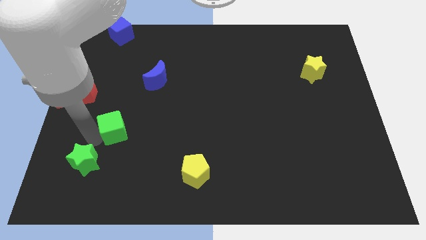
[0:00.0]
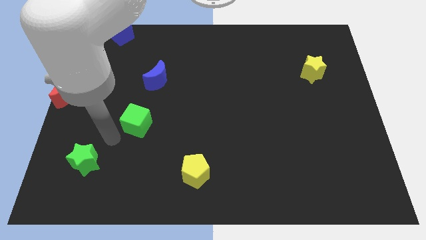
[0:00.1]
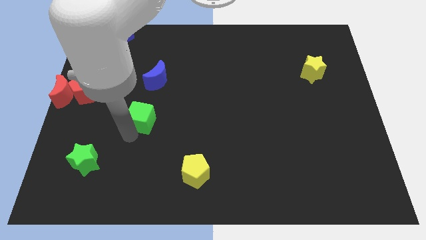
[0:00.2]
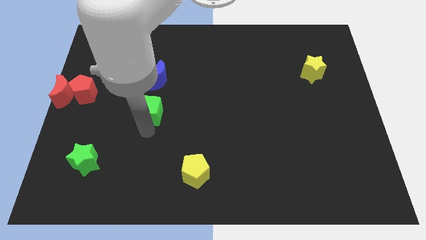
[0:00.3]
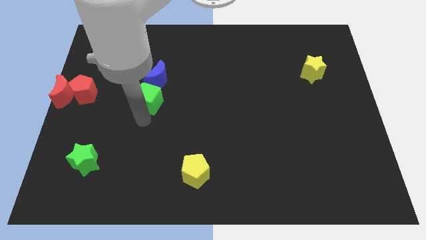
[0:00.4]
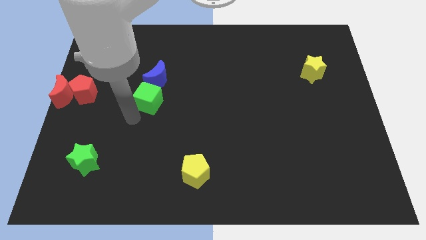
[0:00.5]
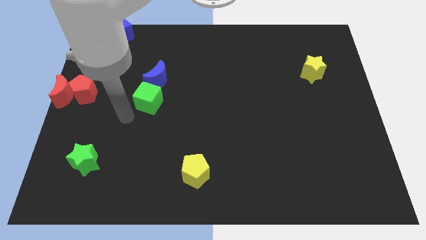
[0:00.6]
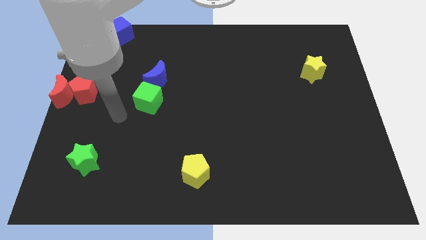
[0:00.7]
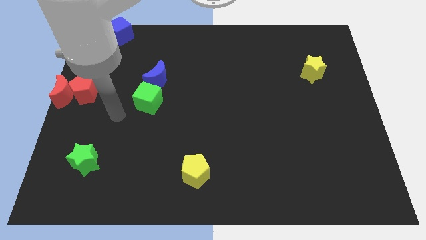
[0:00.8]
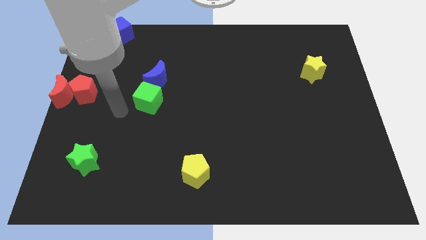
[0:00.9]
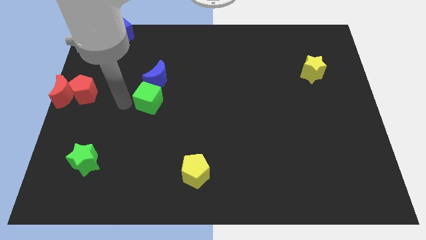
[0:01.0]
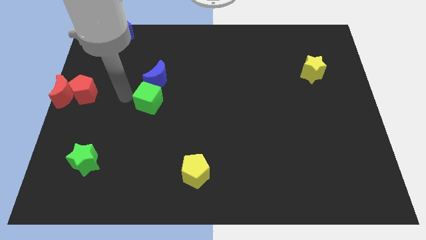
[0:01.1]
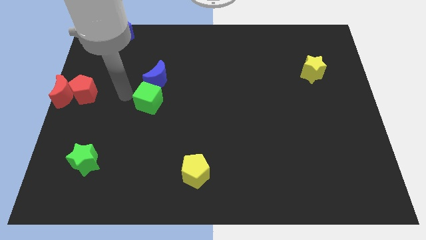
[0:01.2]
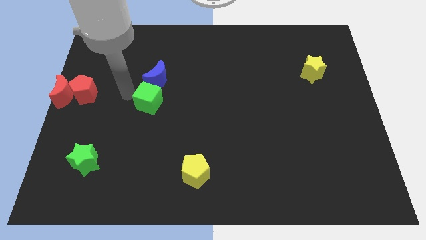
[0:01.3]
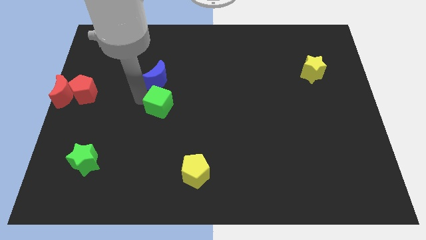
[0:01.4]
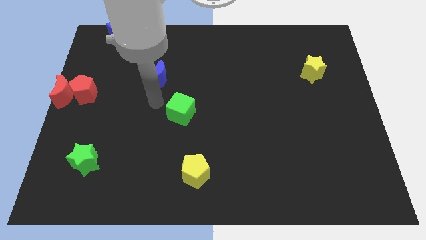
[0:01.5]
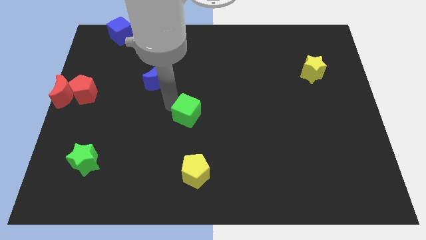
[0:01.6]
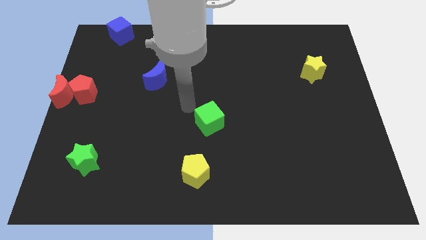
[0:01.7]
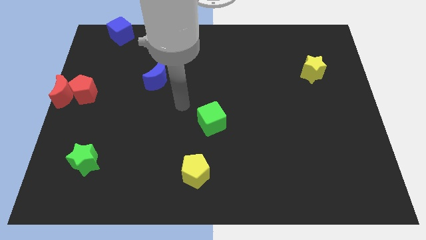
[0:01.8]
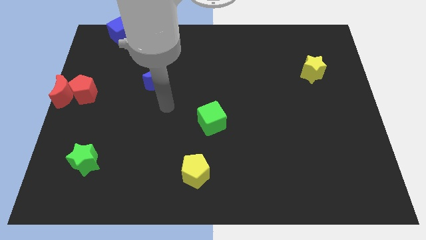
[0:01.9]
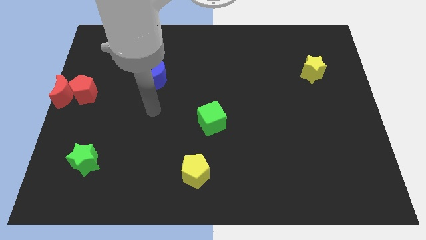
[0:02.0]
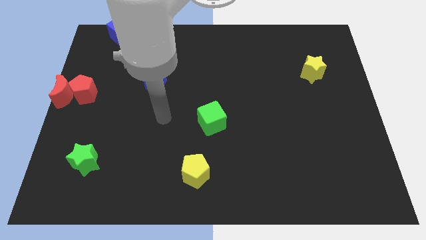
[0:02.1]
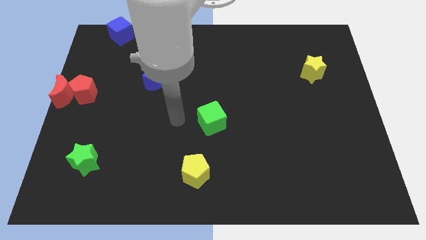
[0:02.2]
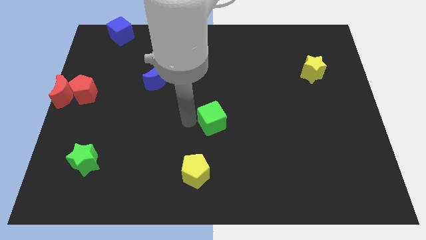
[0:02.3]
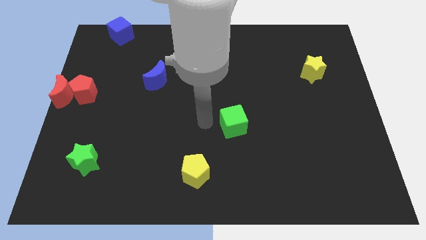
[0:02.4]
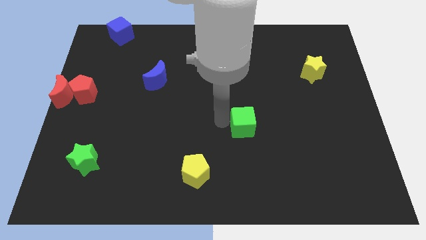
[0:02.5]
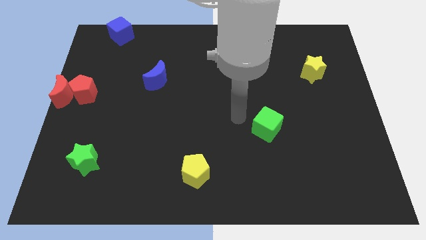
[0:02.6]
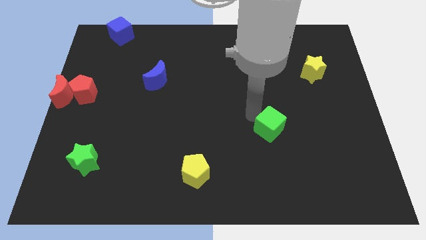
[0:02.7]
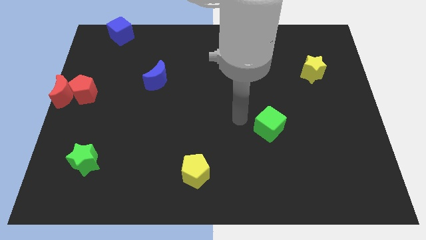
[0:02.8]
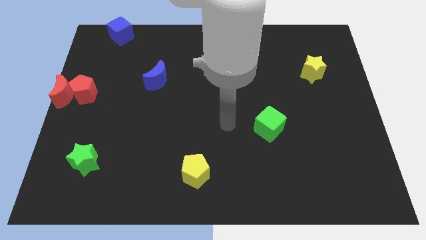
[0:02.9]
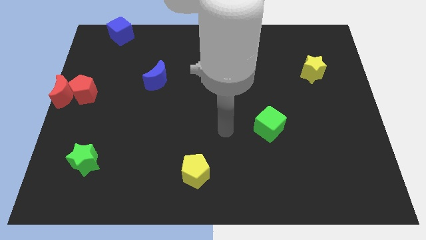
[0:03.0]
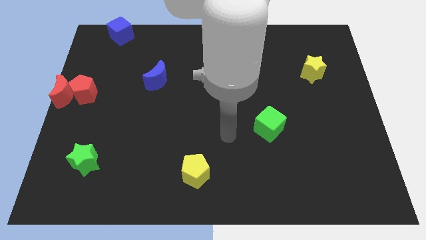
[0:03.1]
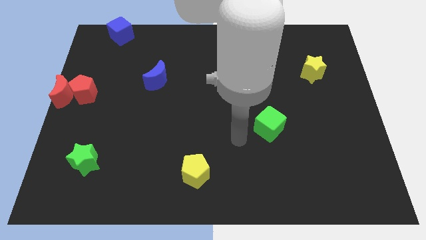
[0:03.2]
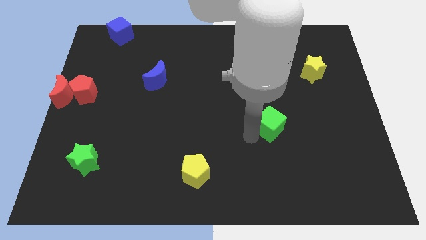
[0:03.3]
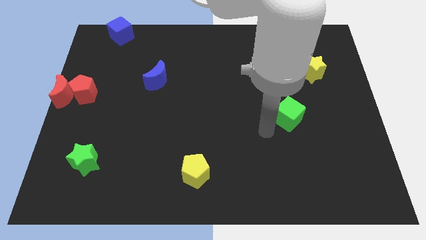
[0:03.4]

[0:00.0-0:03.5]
drag the green cube to the right

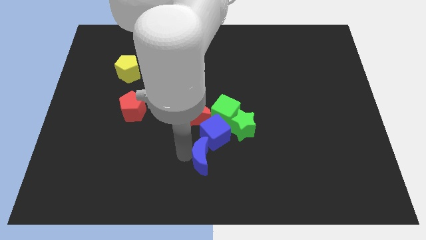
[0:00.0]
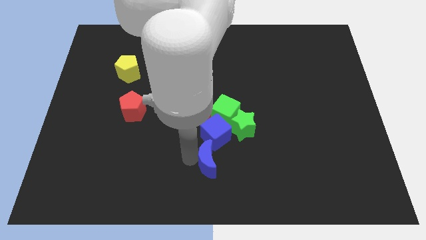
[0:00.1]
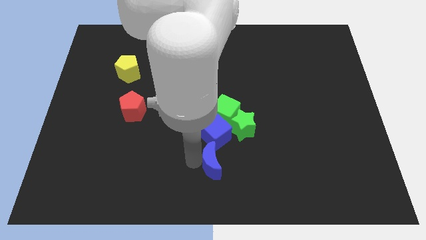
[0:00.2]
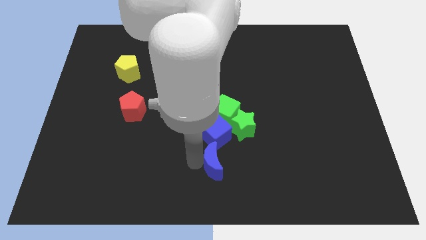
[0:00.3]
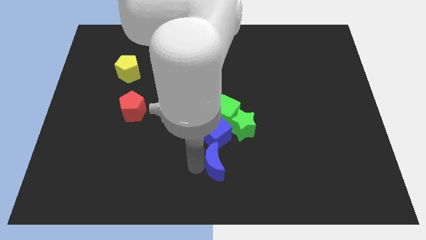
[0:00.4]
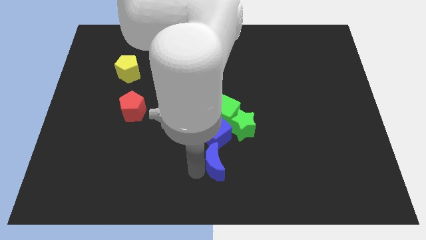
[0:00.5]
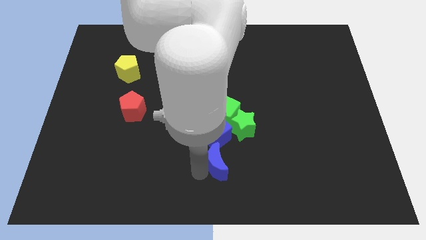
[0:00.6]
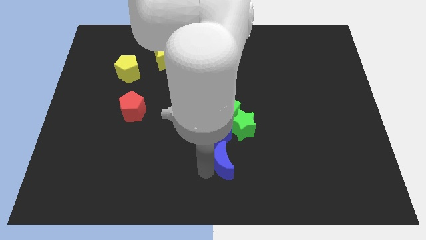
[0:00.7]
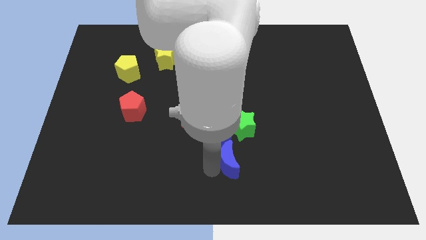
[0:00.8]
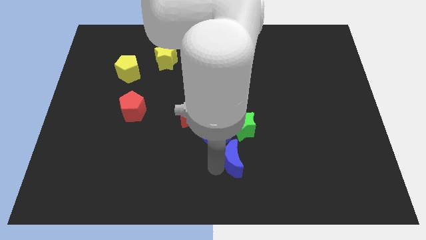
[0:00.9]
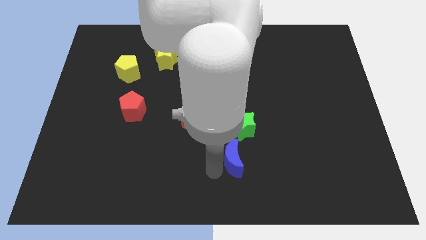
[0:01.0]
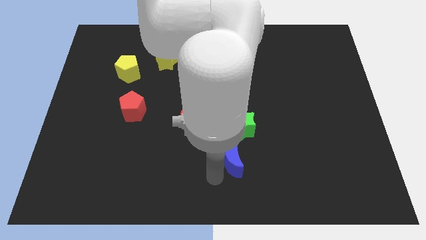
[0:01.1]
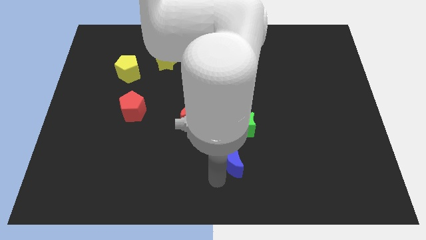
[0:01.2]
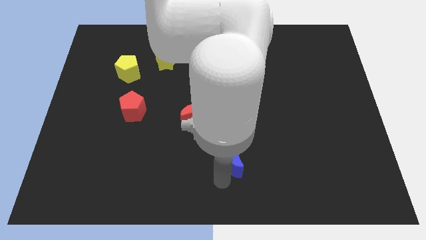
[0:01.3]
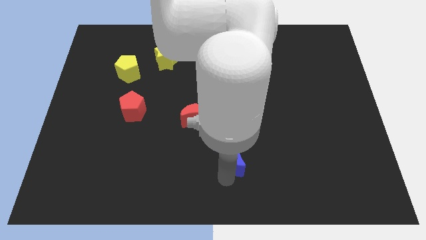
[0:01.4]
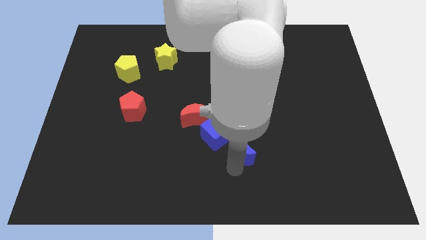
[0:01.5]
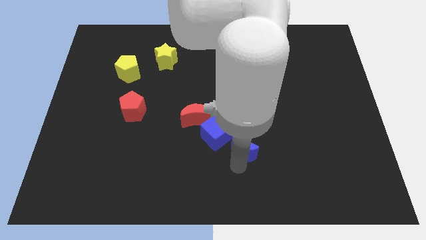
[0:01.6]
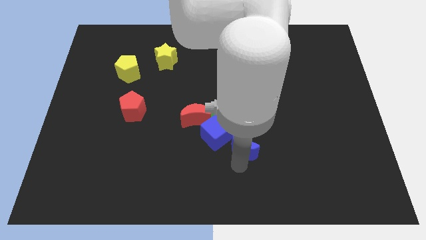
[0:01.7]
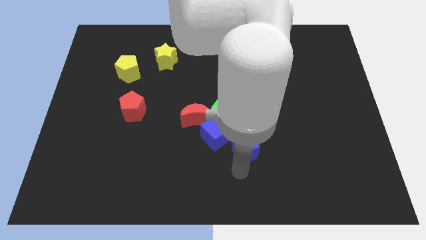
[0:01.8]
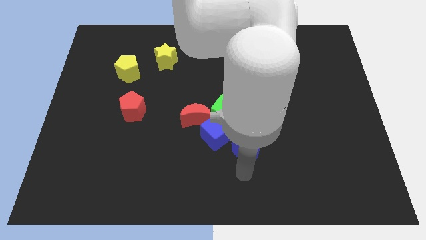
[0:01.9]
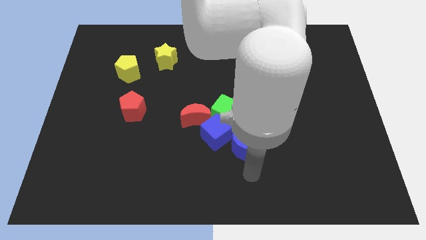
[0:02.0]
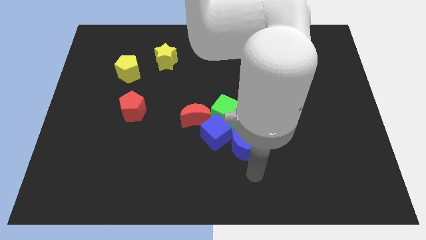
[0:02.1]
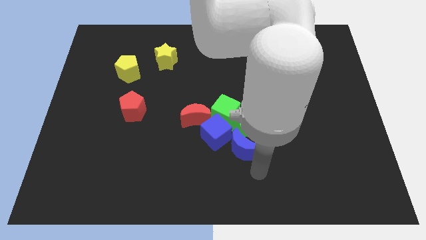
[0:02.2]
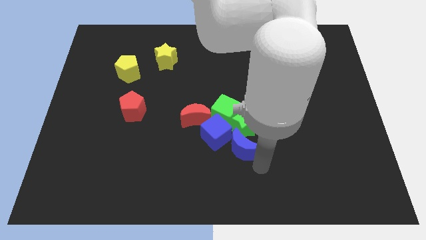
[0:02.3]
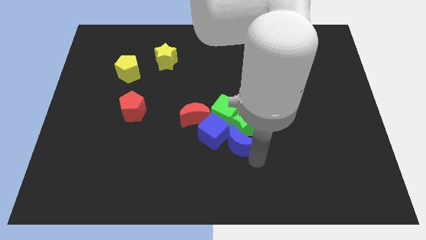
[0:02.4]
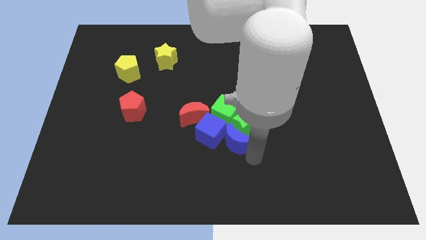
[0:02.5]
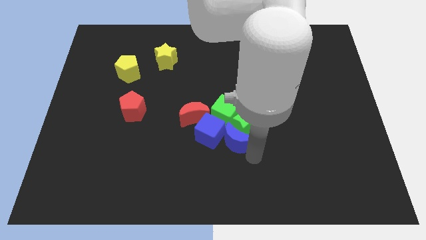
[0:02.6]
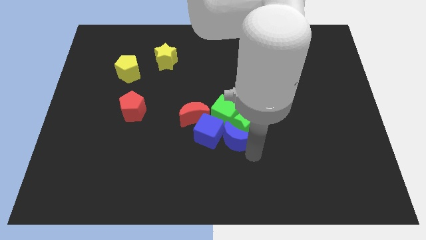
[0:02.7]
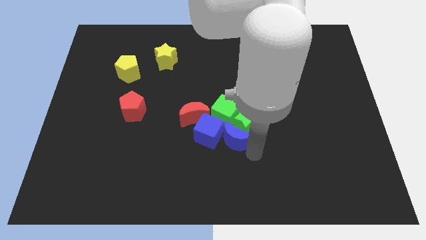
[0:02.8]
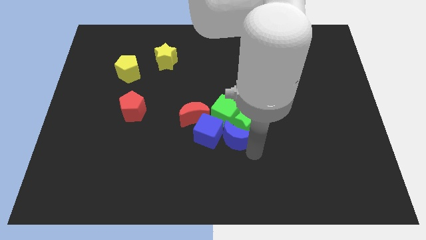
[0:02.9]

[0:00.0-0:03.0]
push the blue moon into group of objects

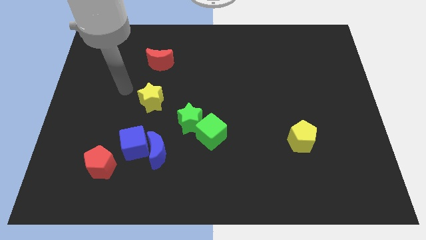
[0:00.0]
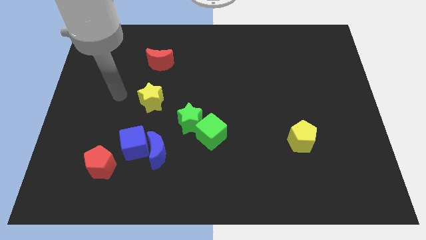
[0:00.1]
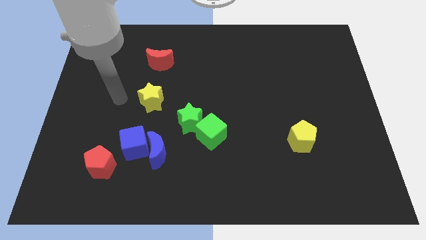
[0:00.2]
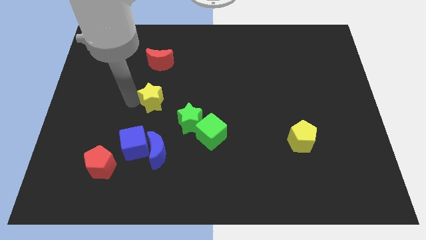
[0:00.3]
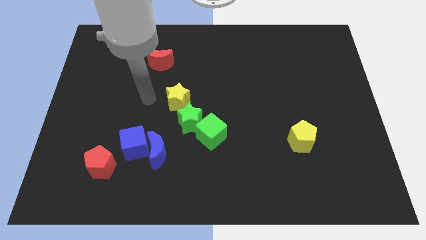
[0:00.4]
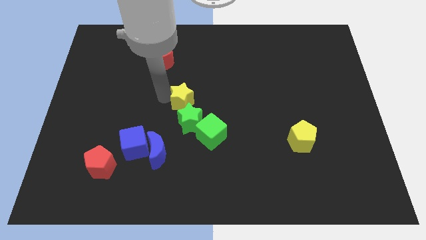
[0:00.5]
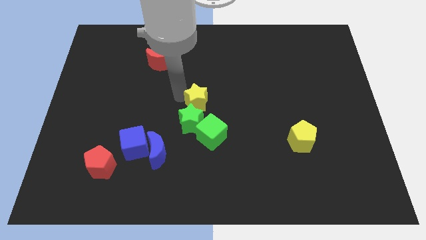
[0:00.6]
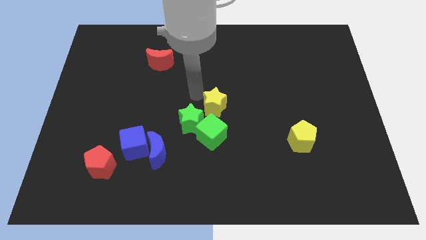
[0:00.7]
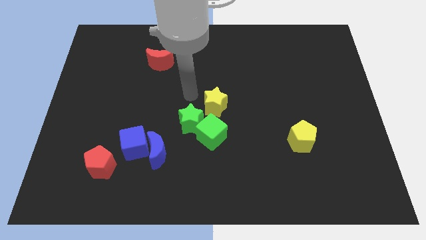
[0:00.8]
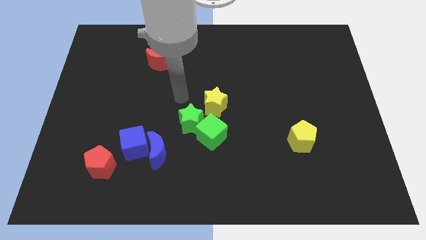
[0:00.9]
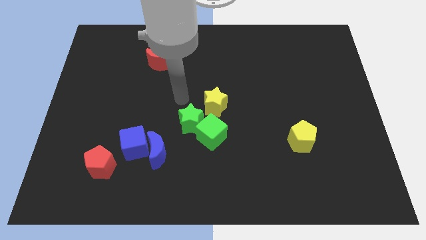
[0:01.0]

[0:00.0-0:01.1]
move the yellow star above the green cube

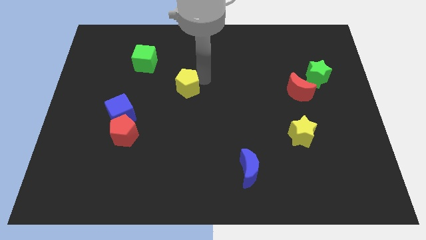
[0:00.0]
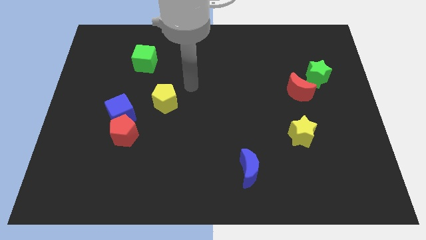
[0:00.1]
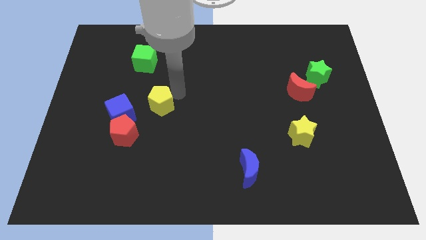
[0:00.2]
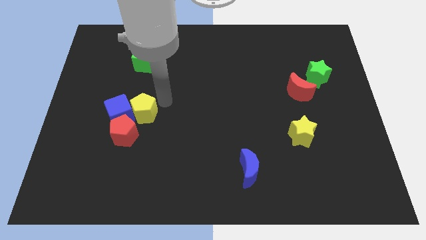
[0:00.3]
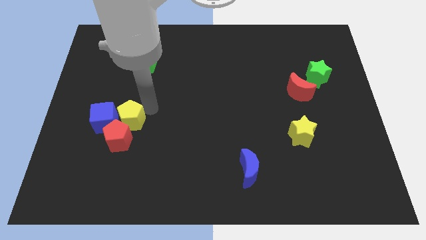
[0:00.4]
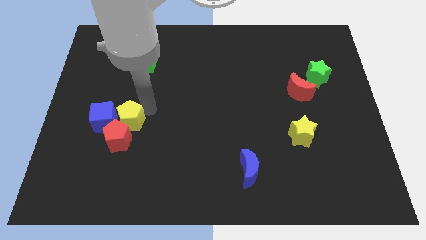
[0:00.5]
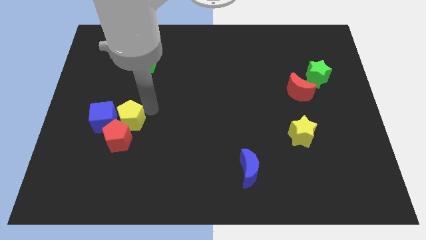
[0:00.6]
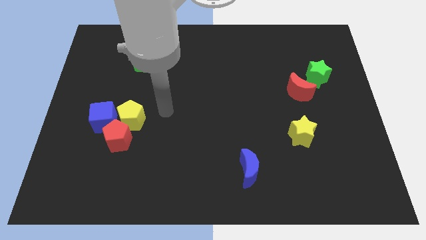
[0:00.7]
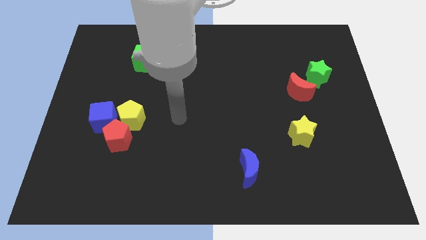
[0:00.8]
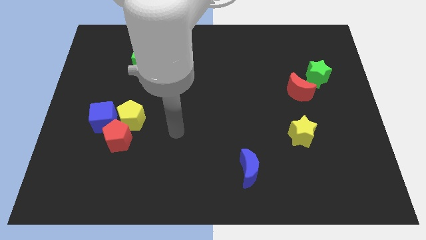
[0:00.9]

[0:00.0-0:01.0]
drag the yellow pentagon close to the blue cube and red pentagon

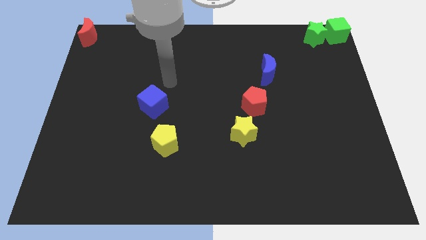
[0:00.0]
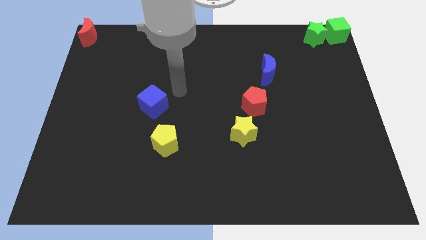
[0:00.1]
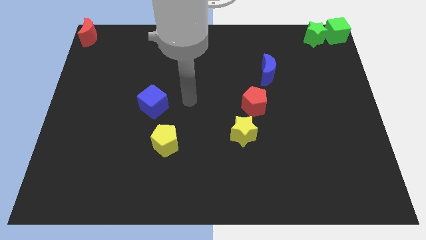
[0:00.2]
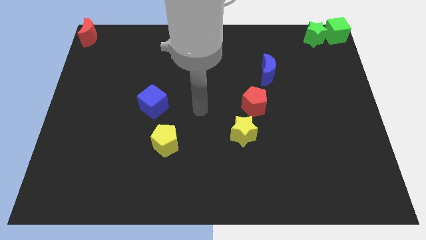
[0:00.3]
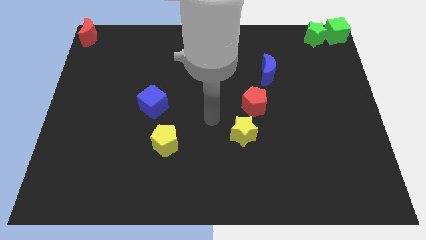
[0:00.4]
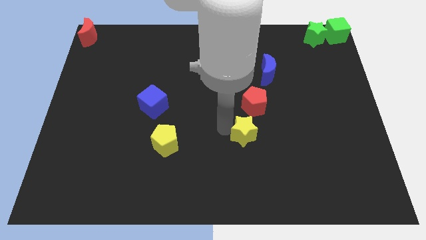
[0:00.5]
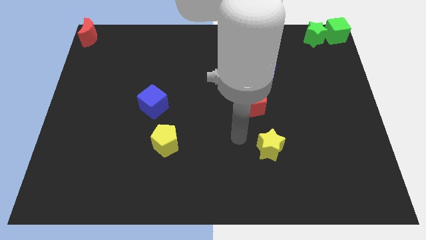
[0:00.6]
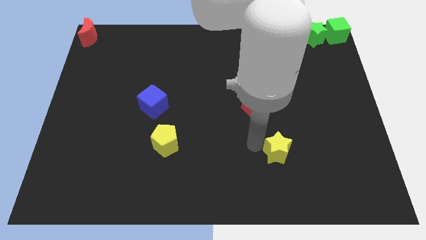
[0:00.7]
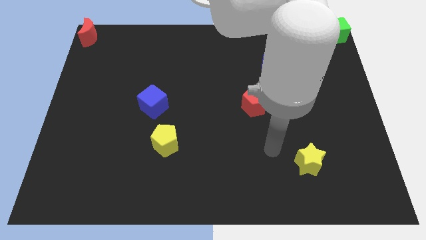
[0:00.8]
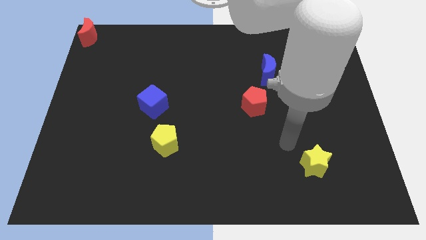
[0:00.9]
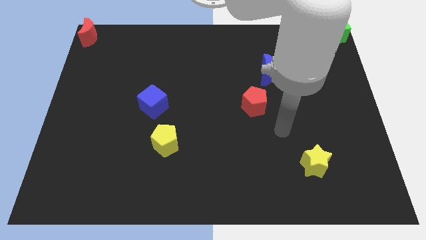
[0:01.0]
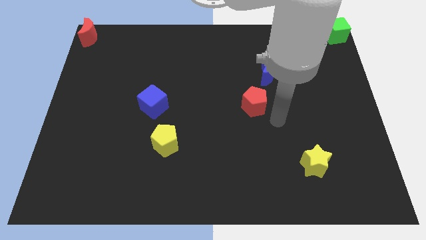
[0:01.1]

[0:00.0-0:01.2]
move the yellow star slightly towards the bottom right of the board
